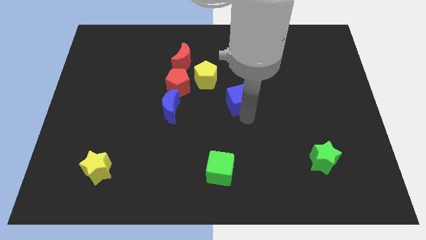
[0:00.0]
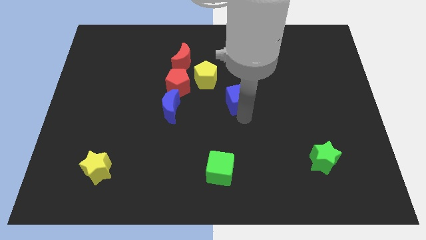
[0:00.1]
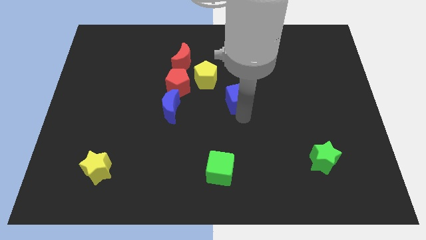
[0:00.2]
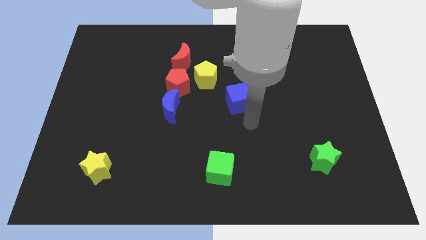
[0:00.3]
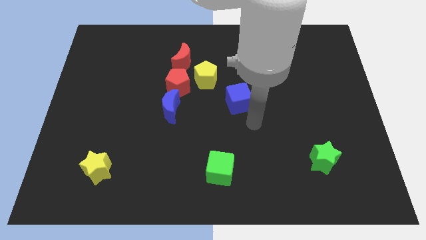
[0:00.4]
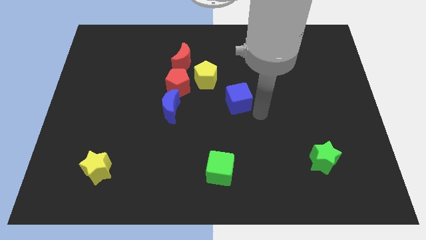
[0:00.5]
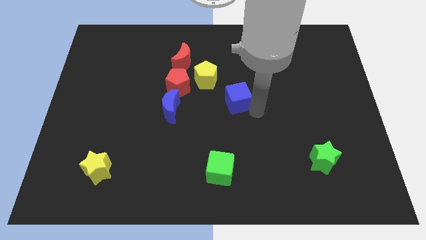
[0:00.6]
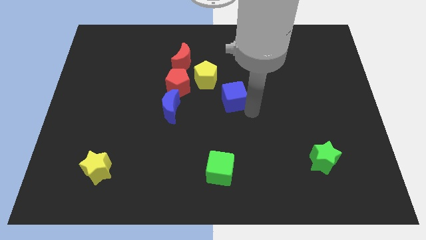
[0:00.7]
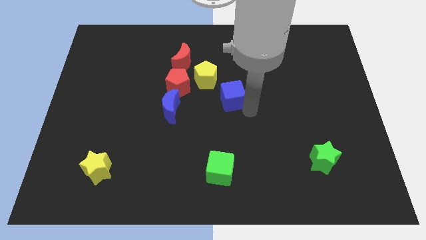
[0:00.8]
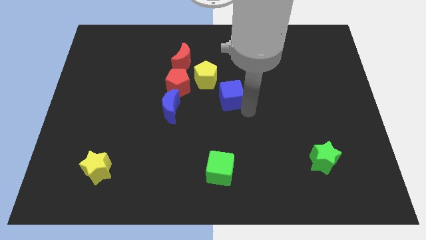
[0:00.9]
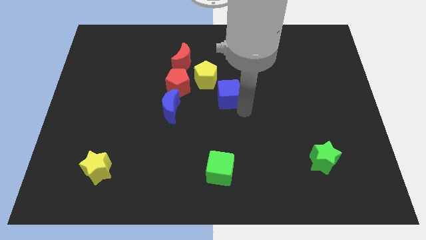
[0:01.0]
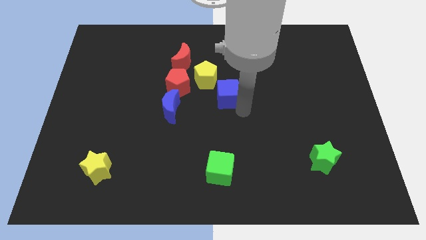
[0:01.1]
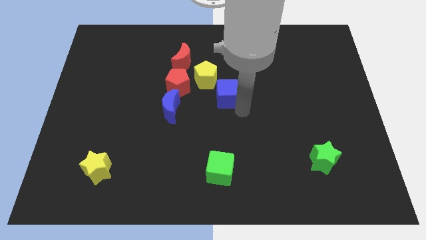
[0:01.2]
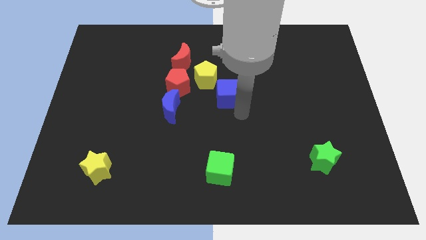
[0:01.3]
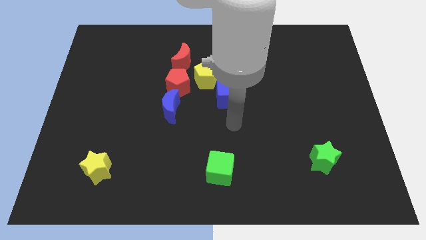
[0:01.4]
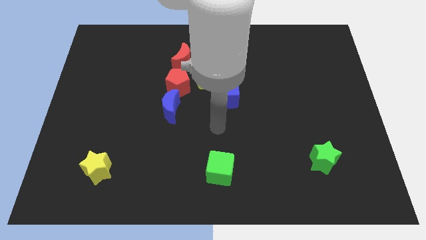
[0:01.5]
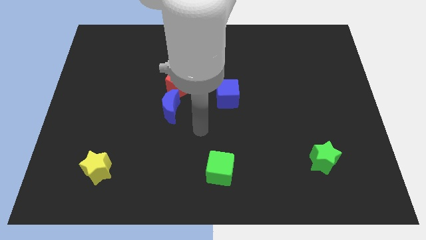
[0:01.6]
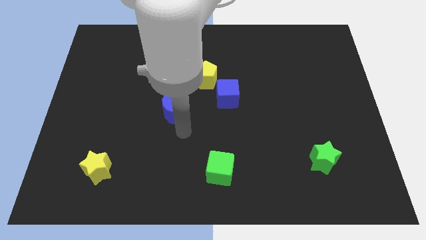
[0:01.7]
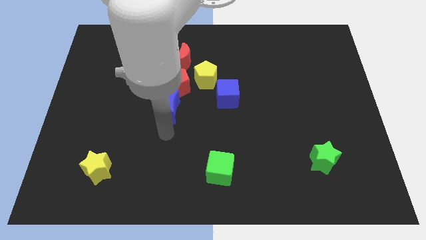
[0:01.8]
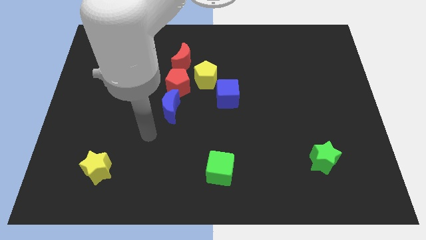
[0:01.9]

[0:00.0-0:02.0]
place the blue cube diagonally bottom right to the yellow pentagon

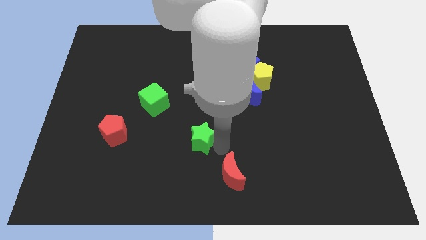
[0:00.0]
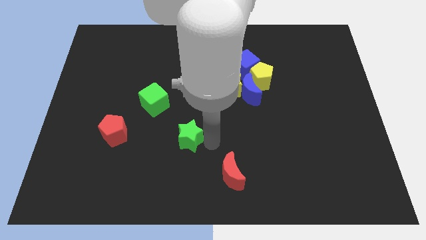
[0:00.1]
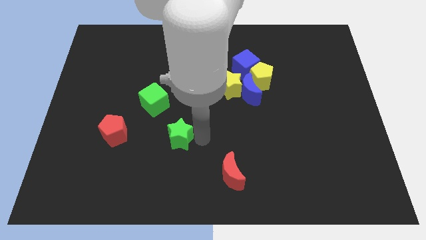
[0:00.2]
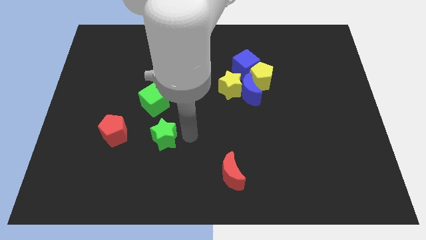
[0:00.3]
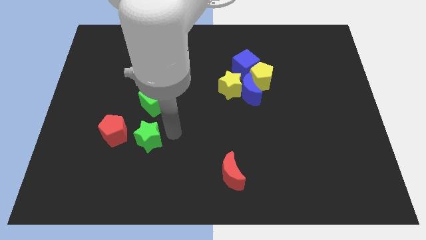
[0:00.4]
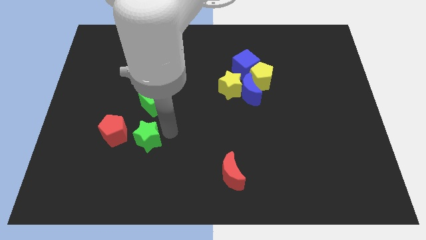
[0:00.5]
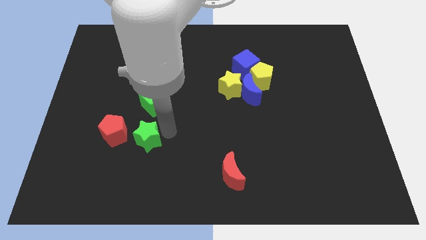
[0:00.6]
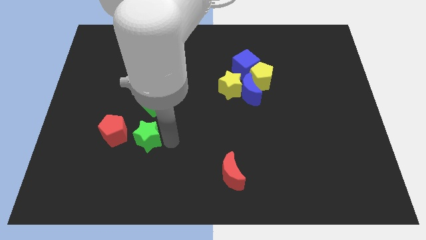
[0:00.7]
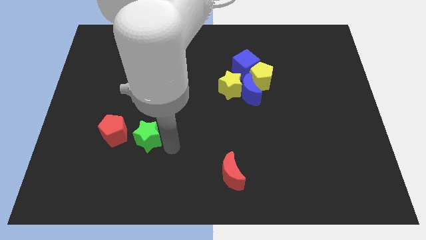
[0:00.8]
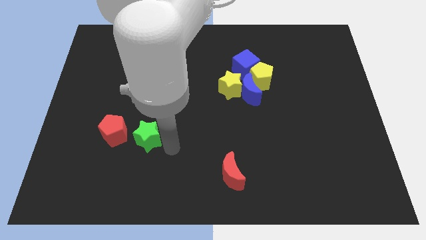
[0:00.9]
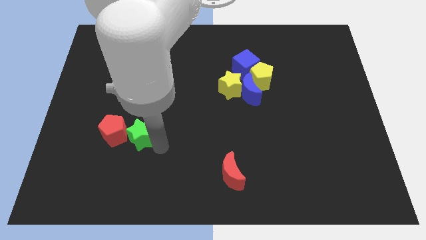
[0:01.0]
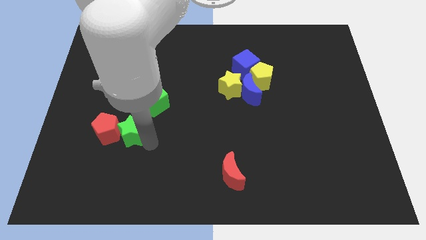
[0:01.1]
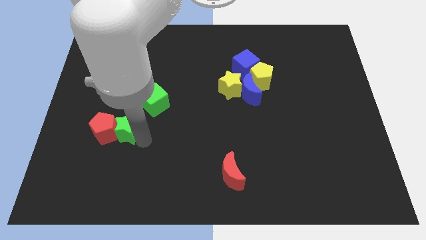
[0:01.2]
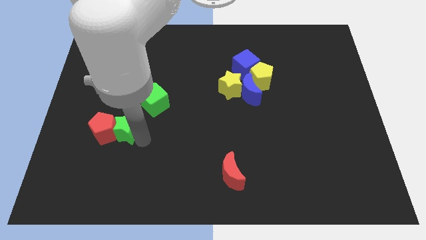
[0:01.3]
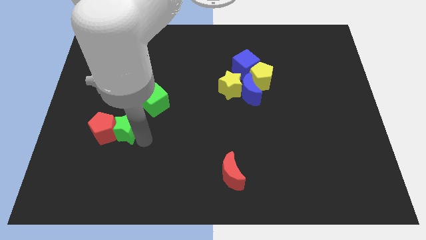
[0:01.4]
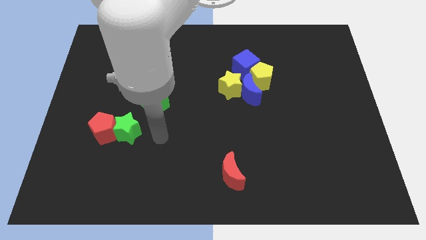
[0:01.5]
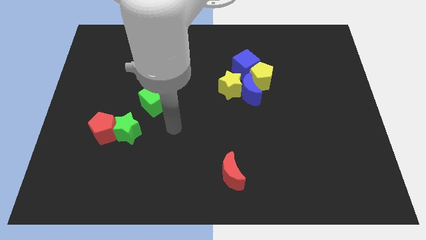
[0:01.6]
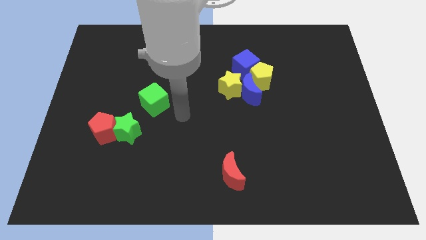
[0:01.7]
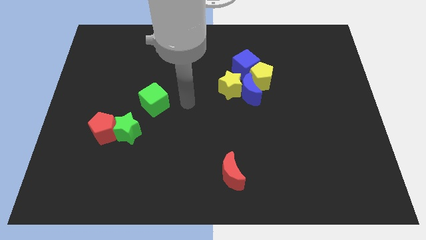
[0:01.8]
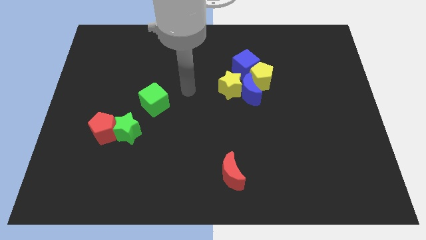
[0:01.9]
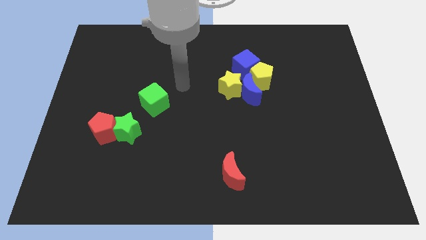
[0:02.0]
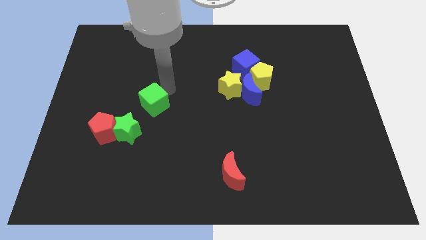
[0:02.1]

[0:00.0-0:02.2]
move the green star into the red pentagon

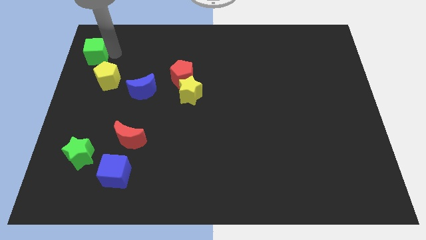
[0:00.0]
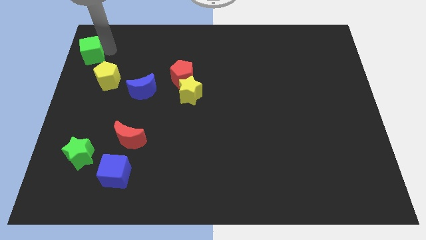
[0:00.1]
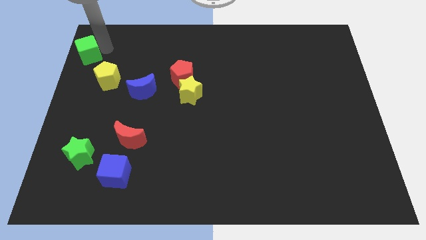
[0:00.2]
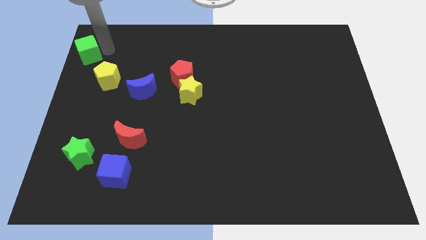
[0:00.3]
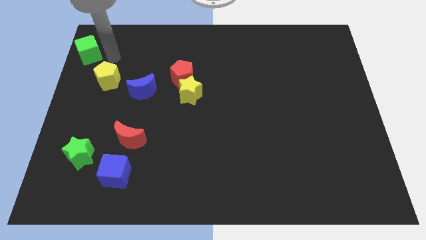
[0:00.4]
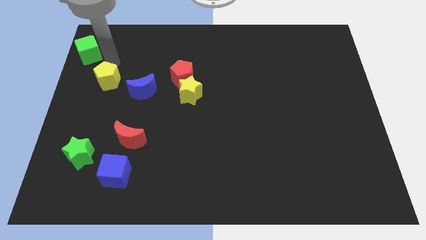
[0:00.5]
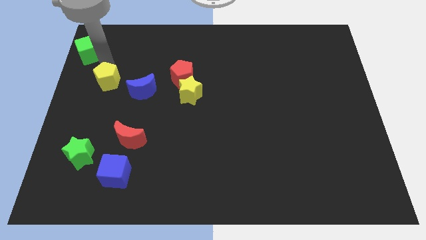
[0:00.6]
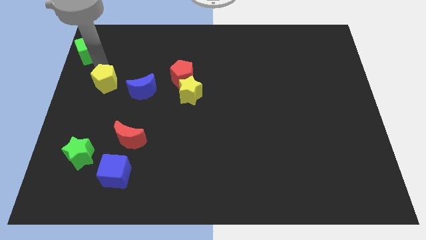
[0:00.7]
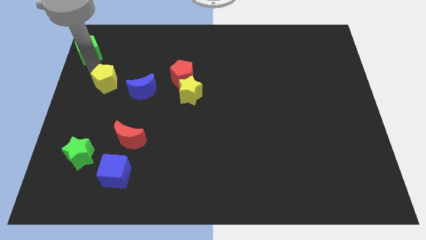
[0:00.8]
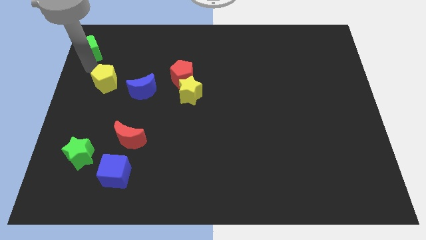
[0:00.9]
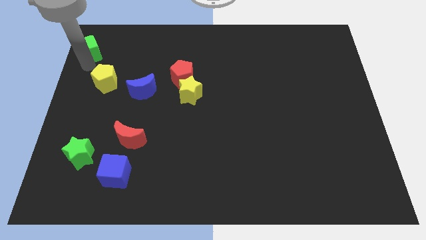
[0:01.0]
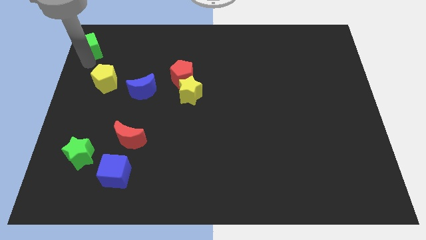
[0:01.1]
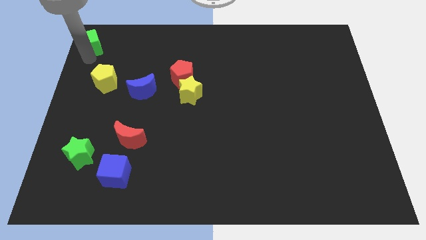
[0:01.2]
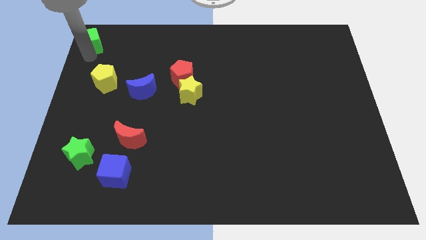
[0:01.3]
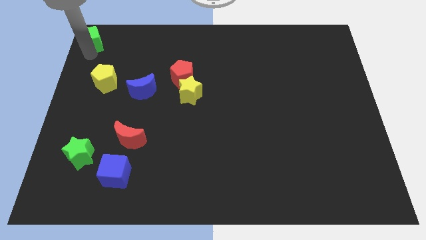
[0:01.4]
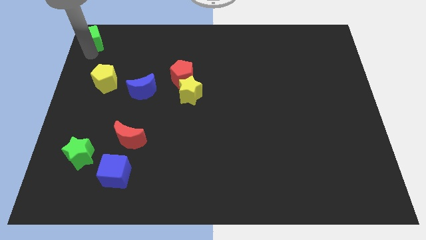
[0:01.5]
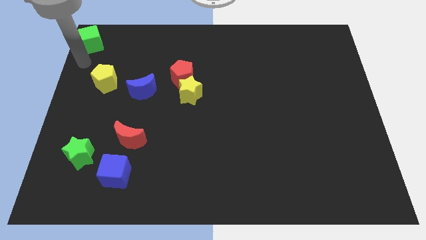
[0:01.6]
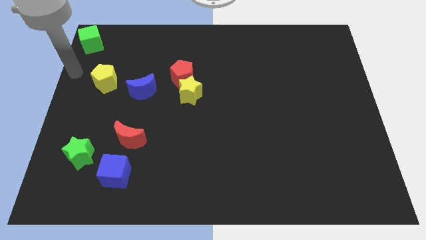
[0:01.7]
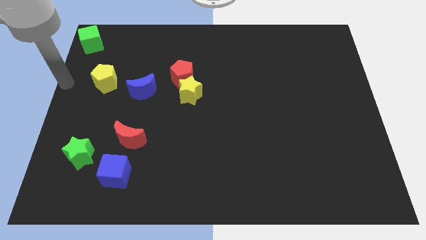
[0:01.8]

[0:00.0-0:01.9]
move the green cube towards the top left

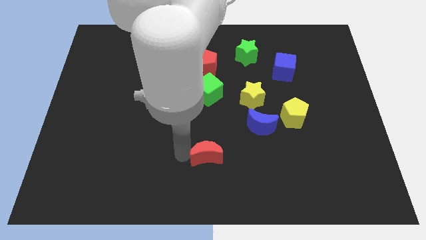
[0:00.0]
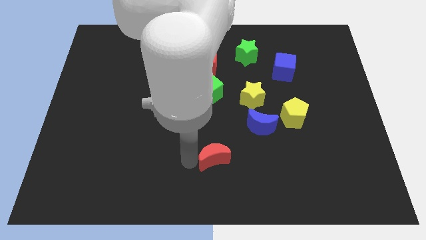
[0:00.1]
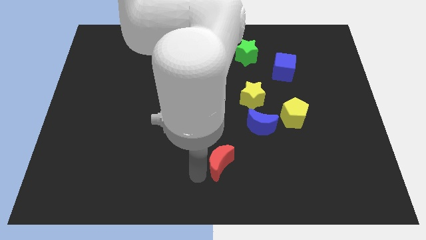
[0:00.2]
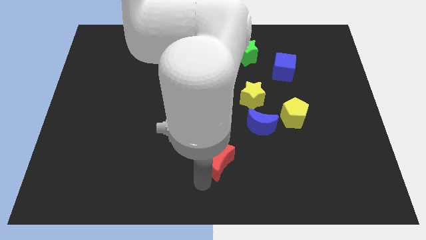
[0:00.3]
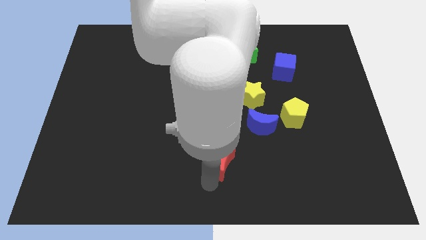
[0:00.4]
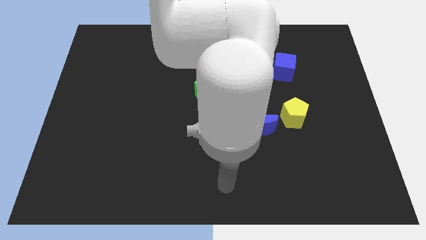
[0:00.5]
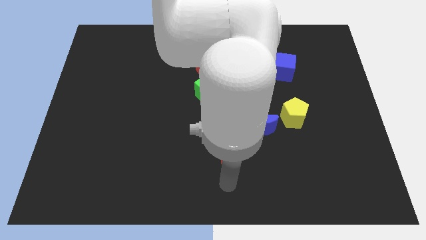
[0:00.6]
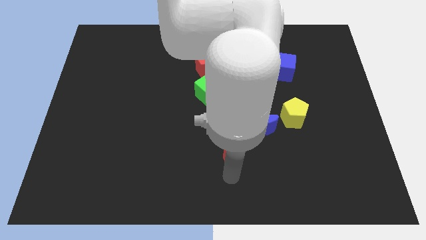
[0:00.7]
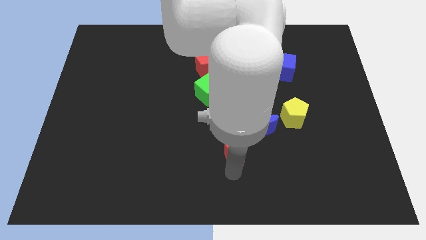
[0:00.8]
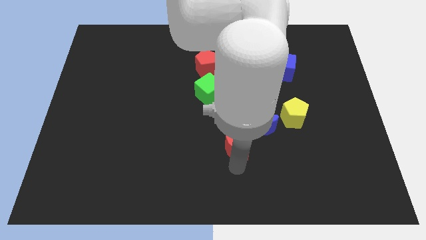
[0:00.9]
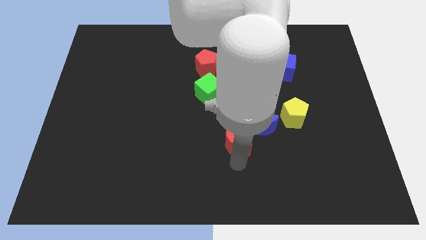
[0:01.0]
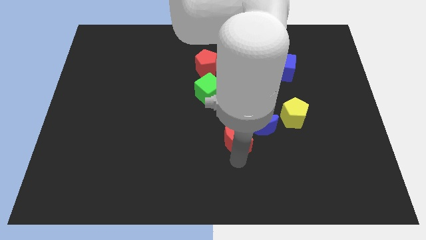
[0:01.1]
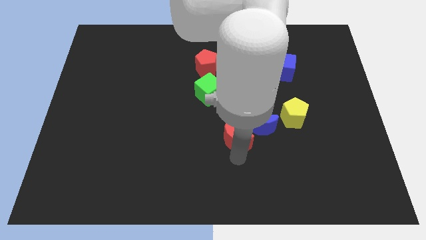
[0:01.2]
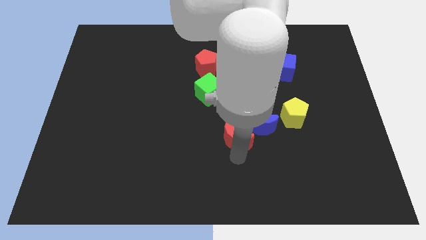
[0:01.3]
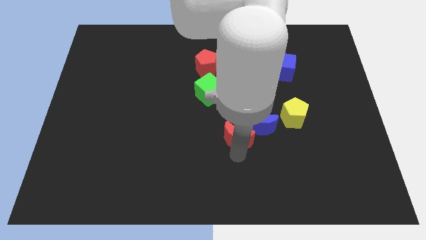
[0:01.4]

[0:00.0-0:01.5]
drag the red crescent towards the blue crescent

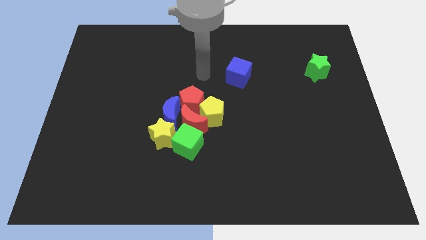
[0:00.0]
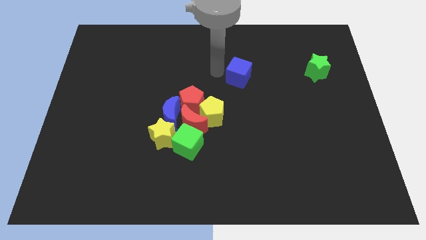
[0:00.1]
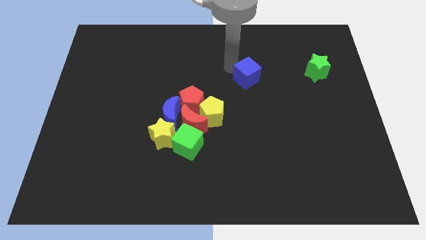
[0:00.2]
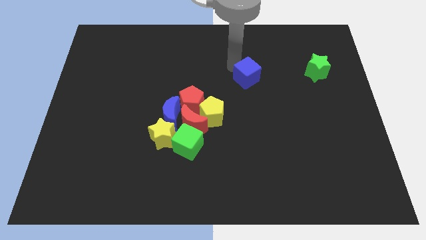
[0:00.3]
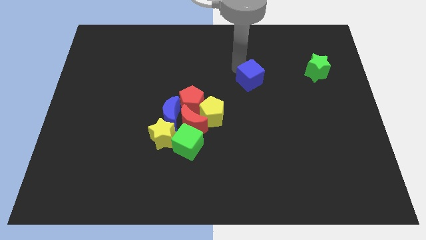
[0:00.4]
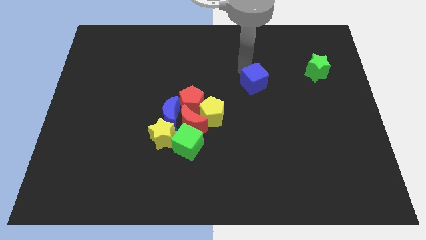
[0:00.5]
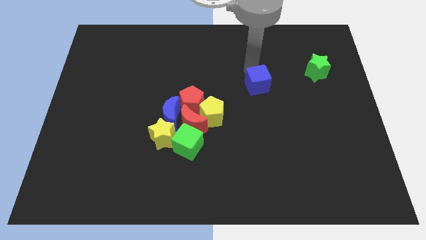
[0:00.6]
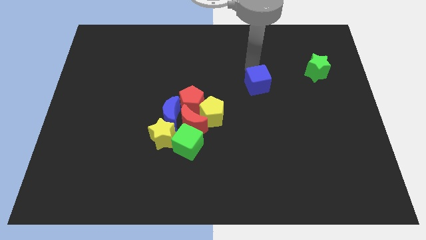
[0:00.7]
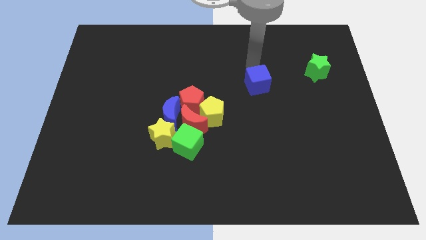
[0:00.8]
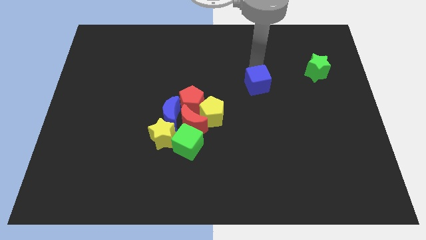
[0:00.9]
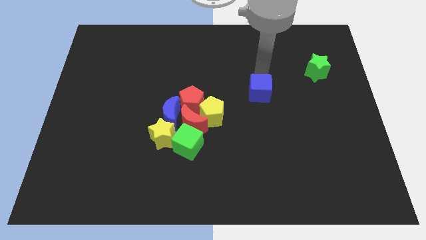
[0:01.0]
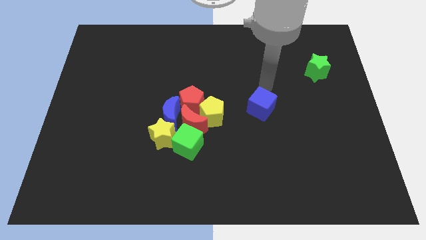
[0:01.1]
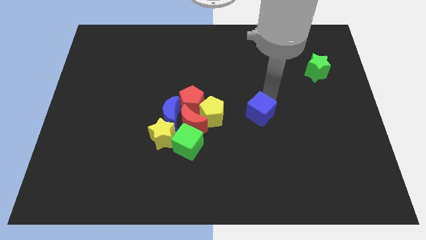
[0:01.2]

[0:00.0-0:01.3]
push the green cube to the right of the yellow pentagon
